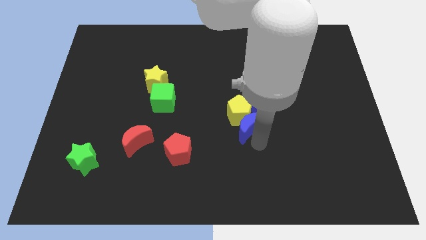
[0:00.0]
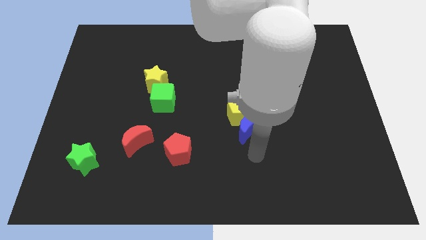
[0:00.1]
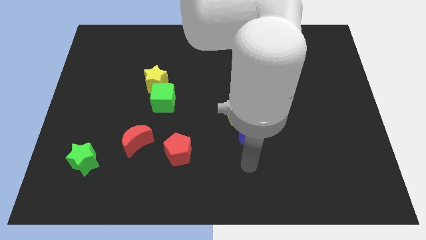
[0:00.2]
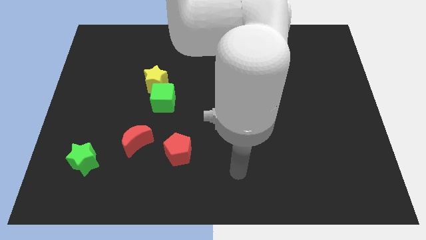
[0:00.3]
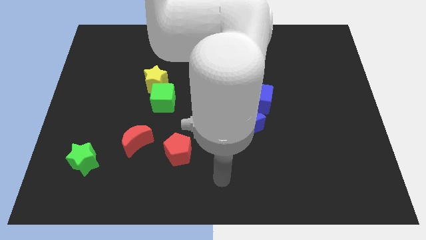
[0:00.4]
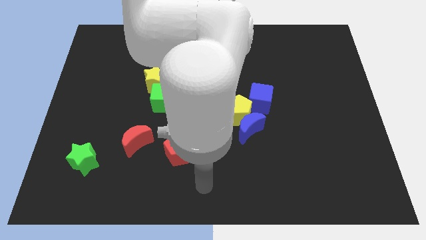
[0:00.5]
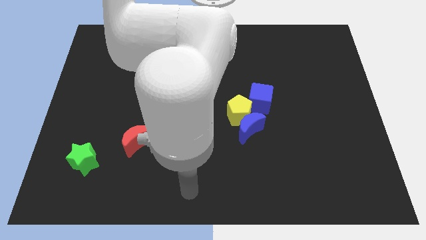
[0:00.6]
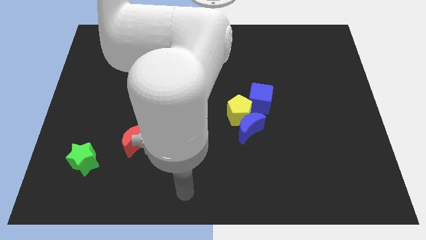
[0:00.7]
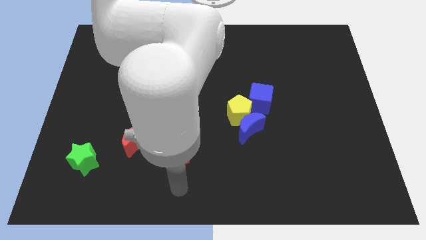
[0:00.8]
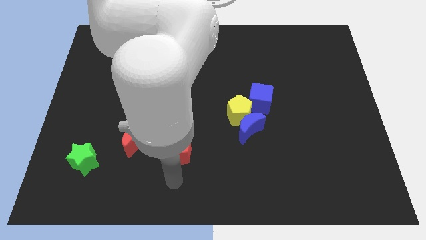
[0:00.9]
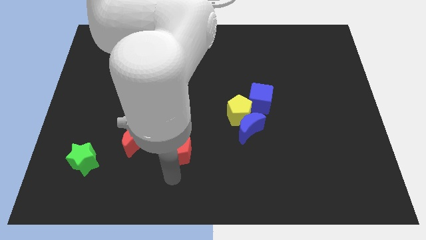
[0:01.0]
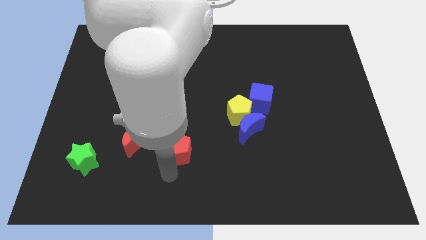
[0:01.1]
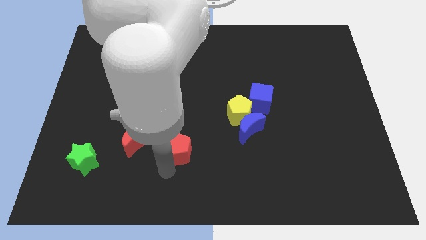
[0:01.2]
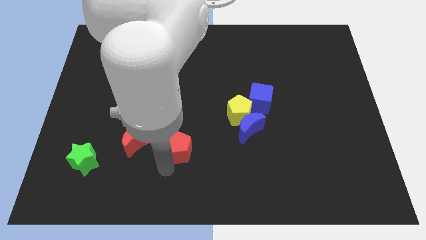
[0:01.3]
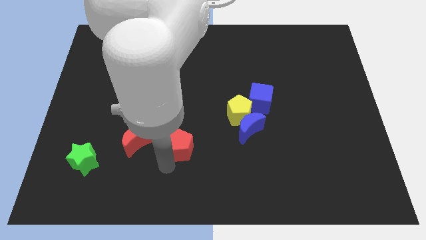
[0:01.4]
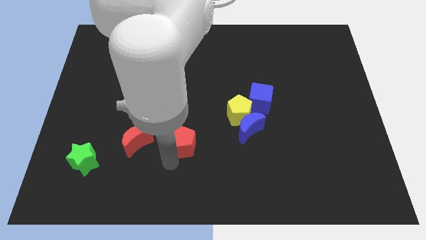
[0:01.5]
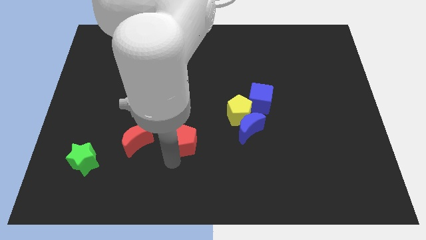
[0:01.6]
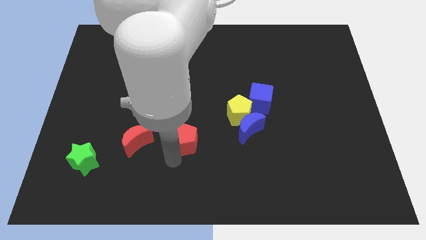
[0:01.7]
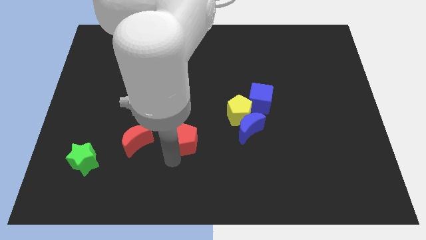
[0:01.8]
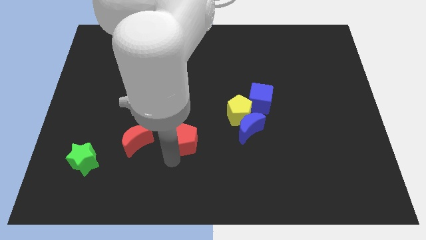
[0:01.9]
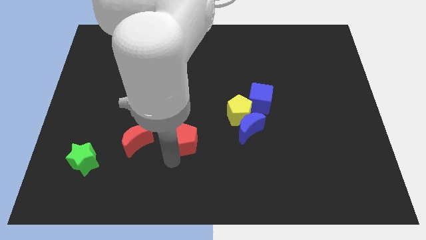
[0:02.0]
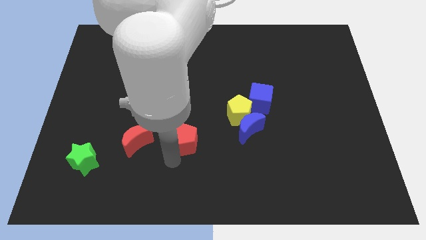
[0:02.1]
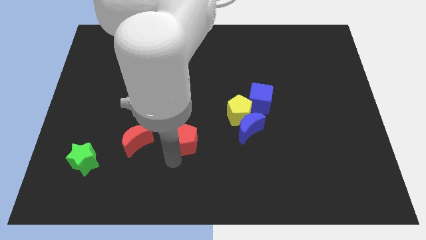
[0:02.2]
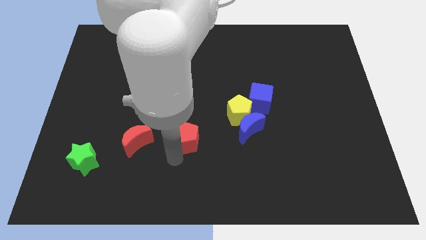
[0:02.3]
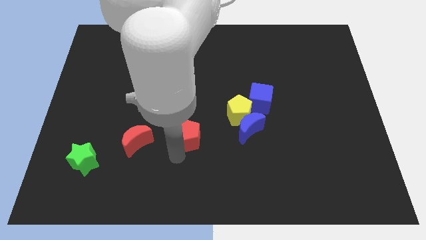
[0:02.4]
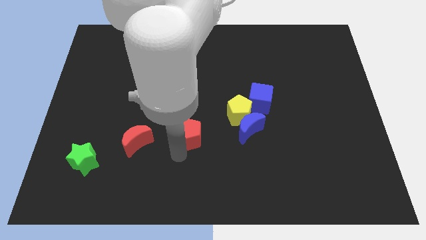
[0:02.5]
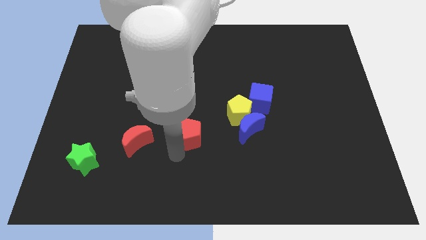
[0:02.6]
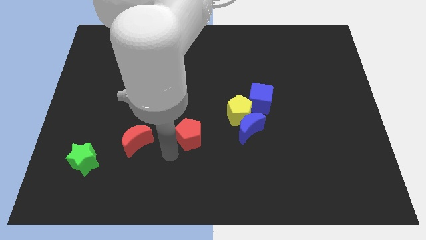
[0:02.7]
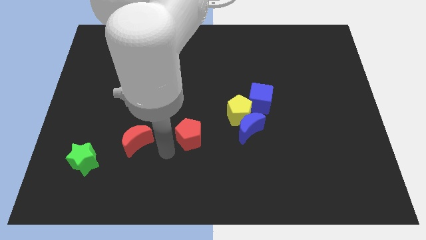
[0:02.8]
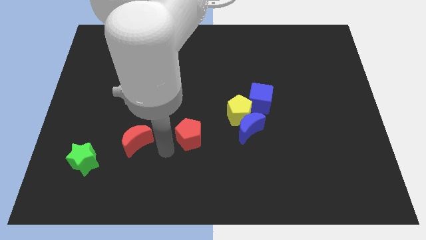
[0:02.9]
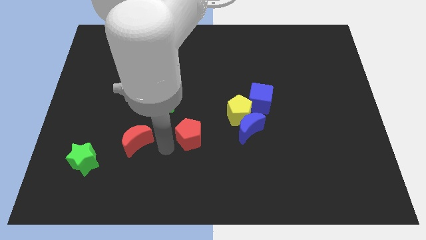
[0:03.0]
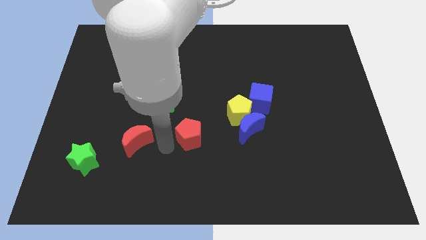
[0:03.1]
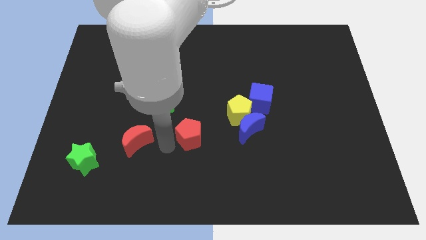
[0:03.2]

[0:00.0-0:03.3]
place the red pentagon between the red moon and blue moon

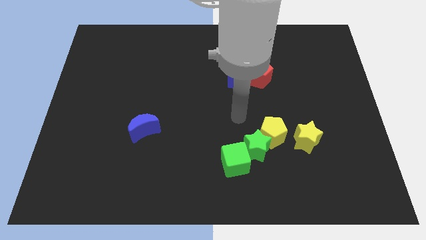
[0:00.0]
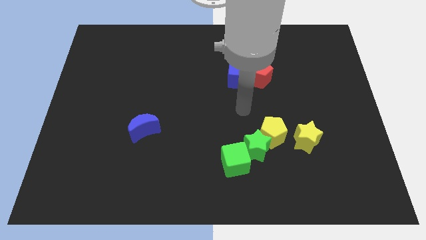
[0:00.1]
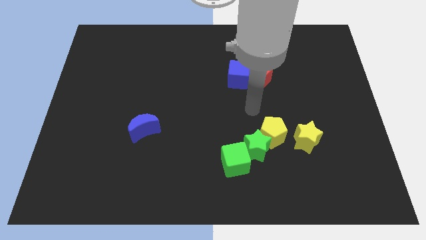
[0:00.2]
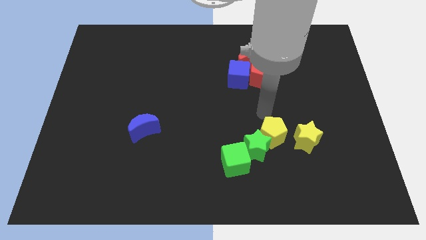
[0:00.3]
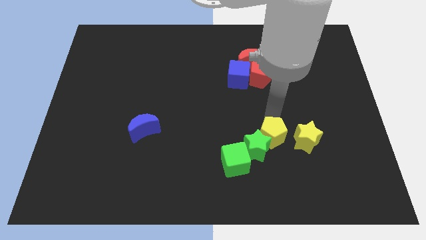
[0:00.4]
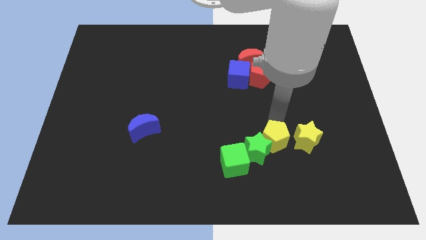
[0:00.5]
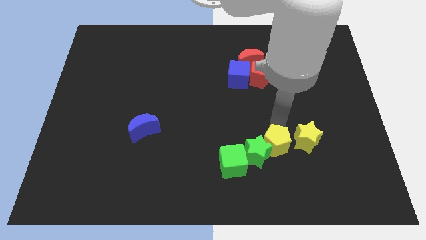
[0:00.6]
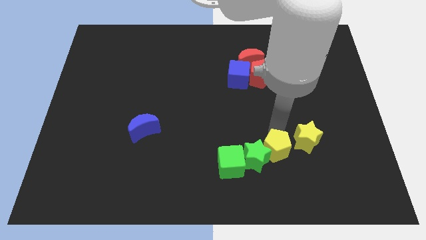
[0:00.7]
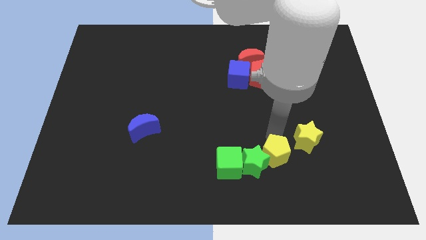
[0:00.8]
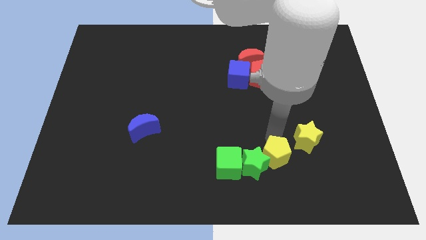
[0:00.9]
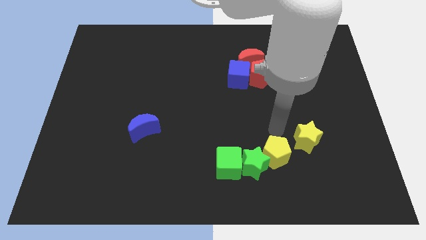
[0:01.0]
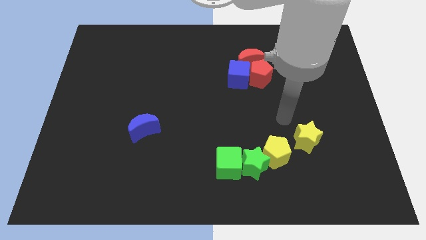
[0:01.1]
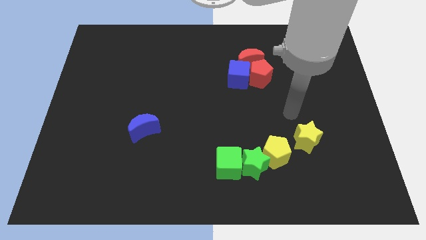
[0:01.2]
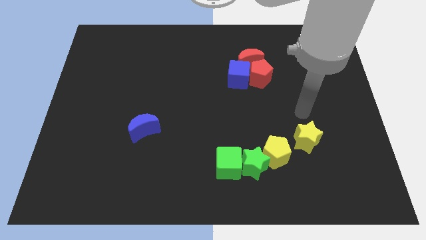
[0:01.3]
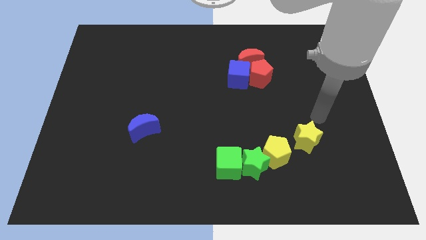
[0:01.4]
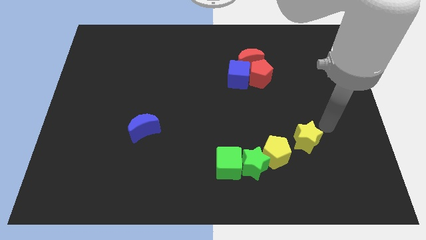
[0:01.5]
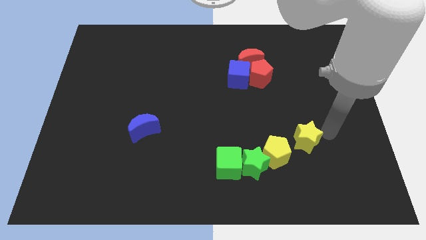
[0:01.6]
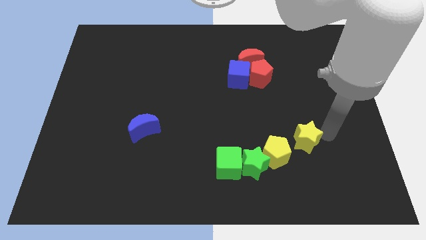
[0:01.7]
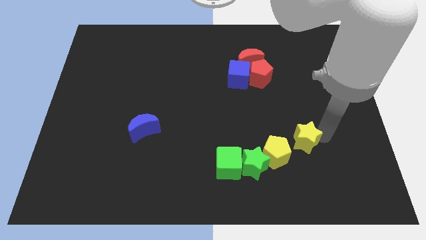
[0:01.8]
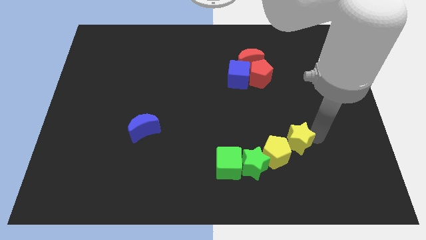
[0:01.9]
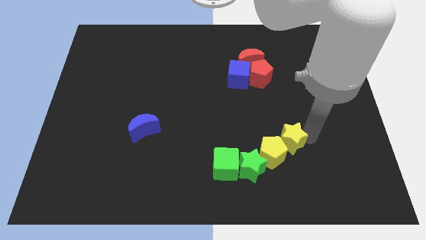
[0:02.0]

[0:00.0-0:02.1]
attach the yellow star to the yellow pentagon

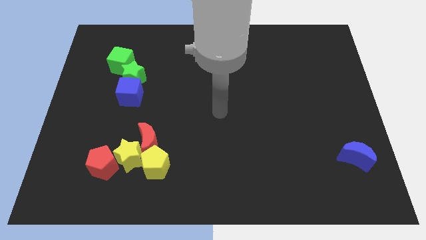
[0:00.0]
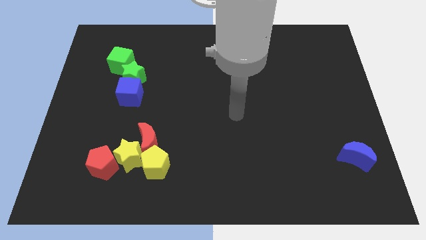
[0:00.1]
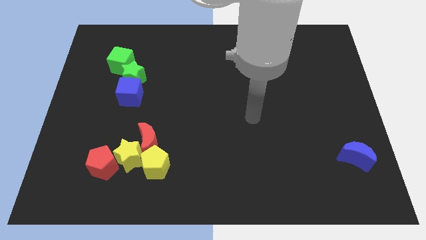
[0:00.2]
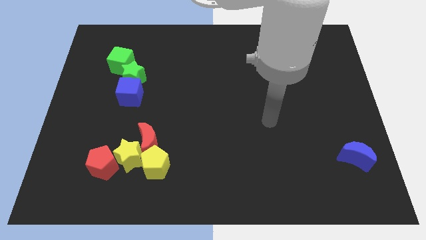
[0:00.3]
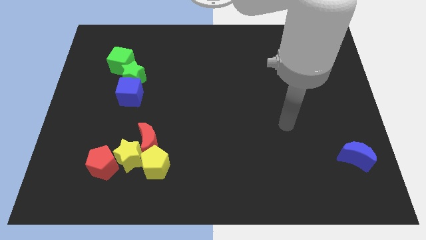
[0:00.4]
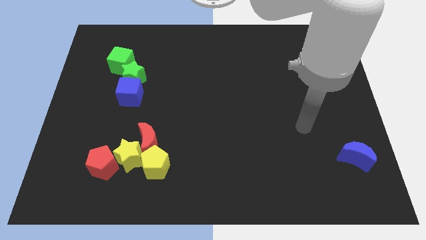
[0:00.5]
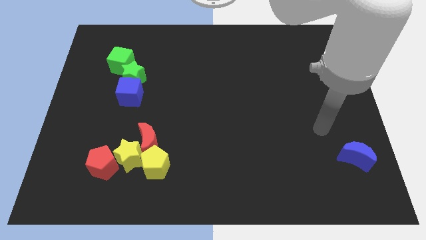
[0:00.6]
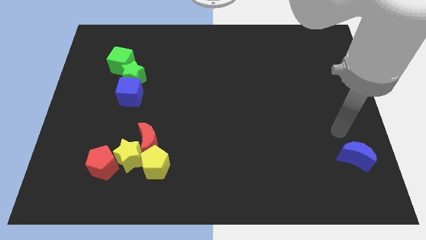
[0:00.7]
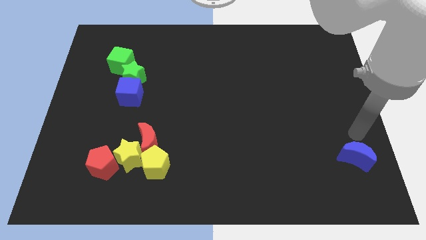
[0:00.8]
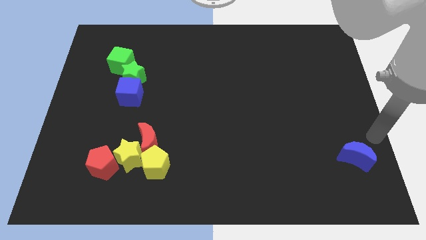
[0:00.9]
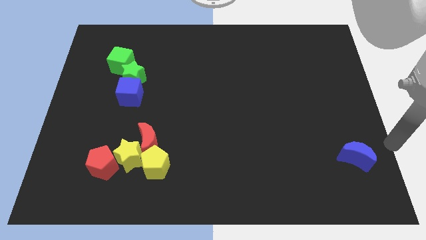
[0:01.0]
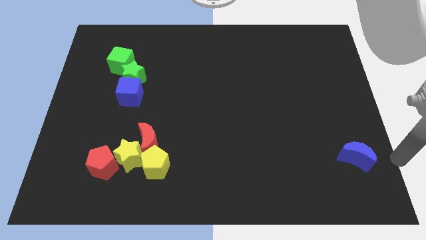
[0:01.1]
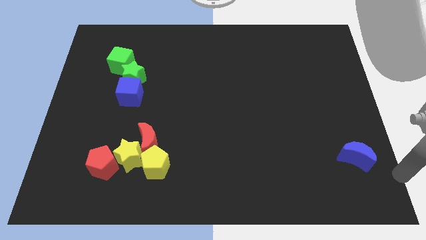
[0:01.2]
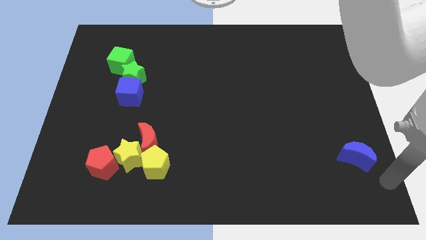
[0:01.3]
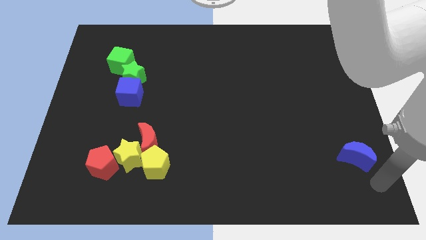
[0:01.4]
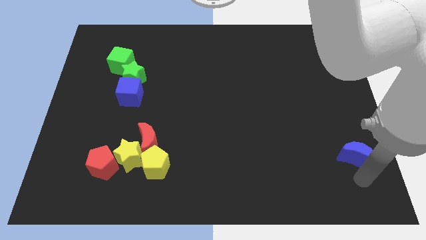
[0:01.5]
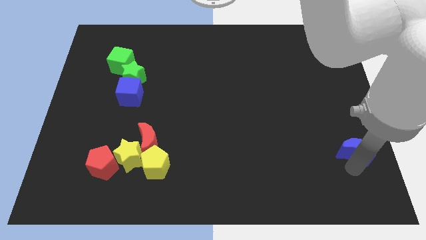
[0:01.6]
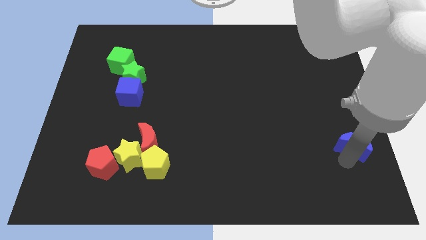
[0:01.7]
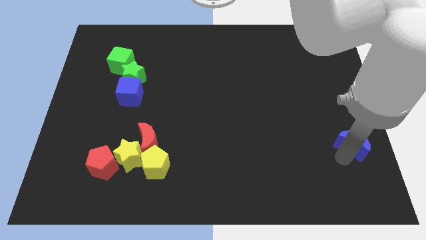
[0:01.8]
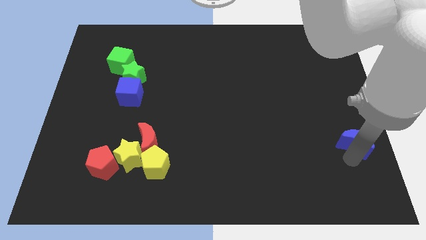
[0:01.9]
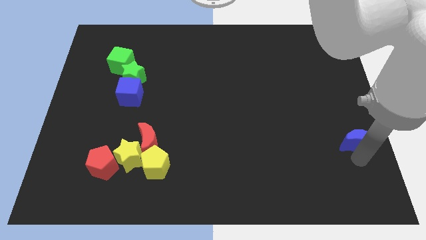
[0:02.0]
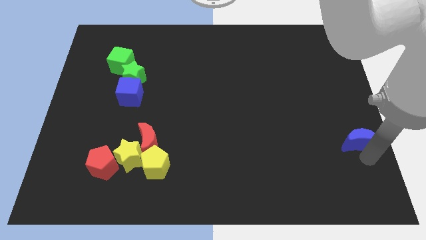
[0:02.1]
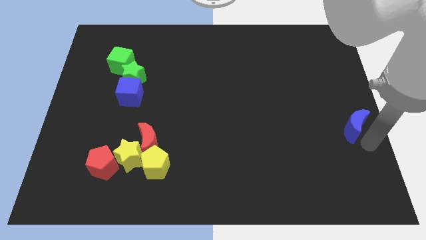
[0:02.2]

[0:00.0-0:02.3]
move the blue moon to the center right of the board

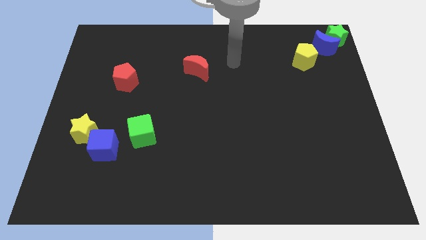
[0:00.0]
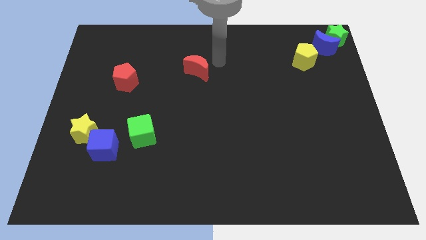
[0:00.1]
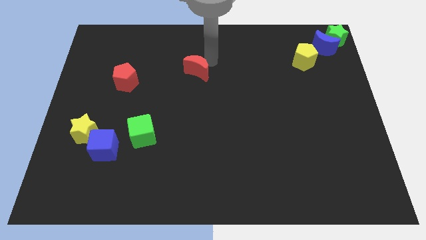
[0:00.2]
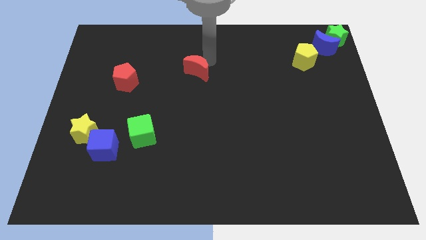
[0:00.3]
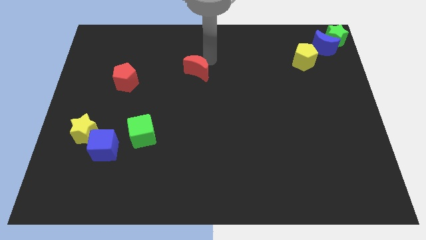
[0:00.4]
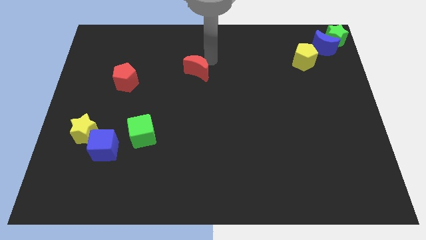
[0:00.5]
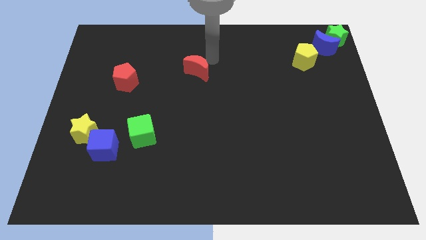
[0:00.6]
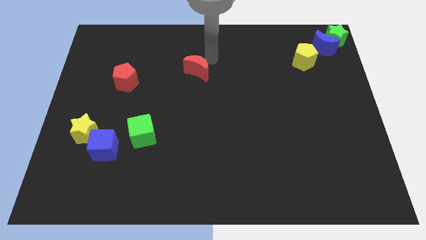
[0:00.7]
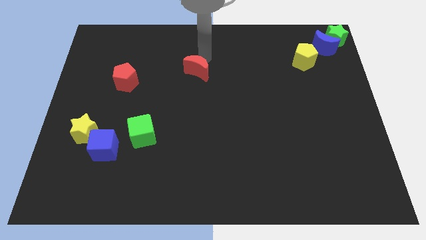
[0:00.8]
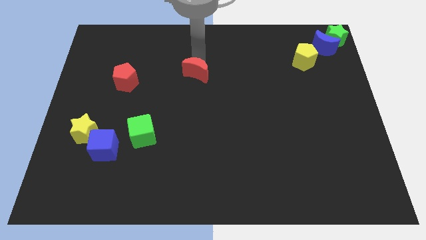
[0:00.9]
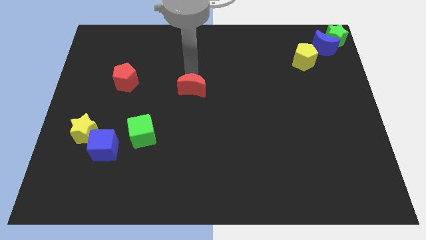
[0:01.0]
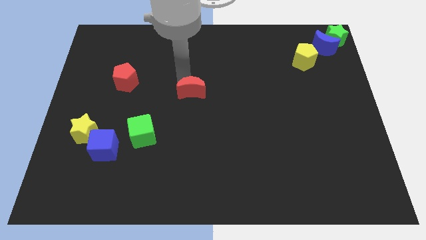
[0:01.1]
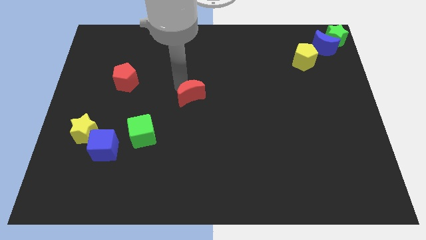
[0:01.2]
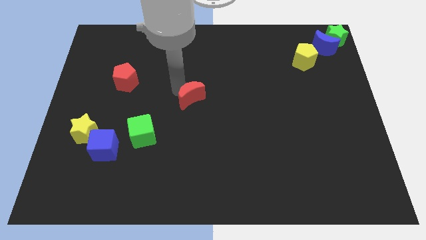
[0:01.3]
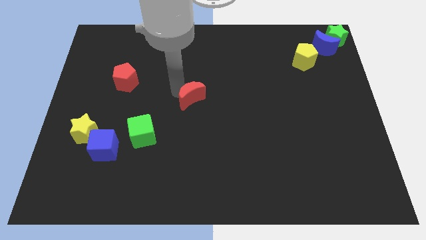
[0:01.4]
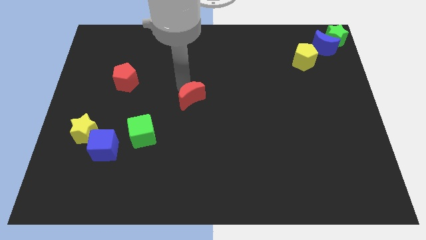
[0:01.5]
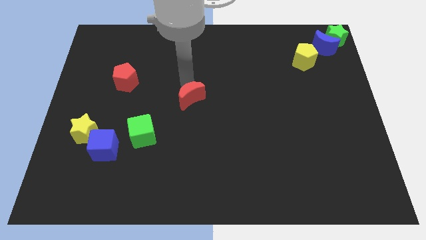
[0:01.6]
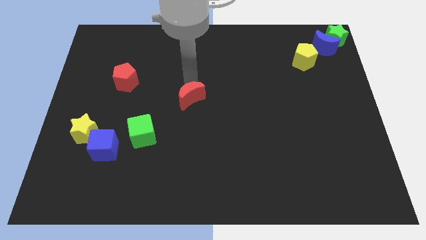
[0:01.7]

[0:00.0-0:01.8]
push the red moon downward
